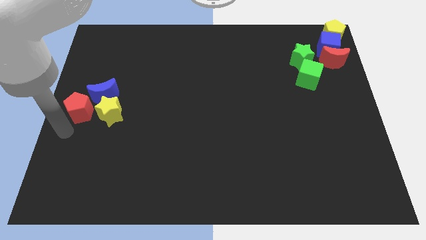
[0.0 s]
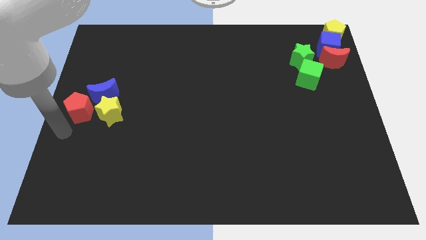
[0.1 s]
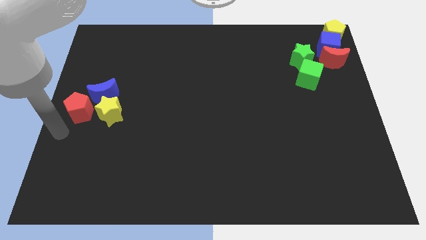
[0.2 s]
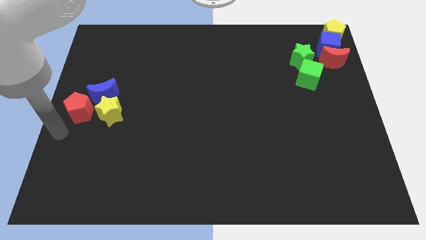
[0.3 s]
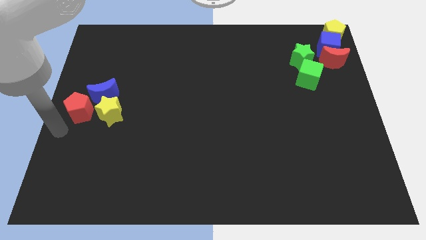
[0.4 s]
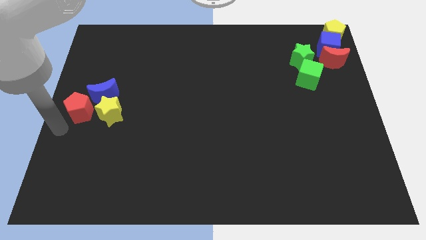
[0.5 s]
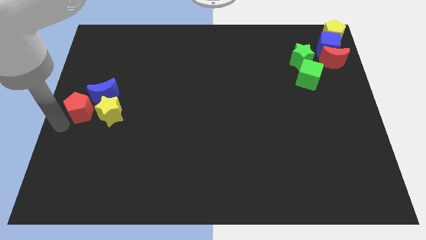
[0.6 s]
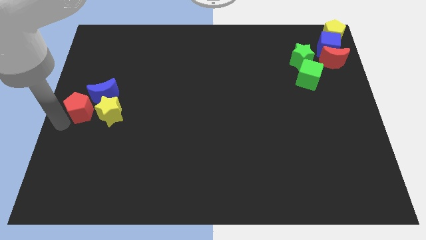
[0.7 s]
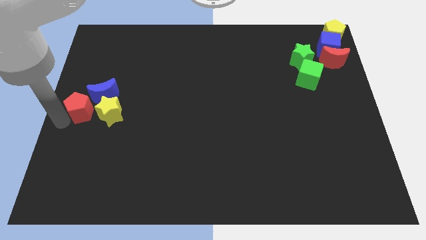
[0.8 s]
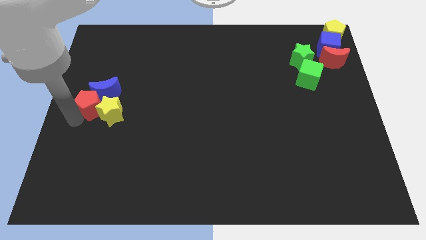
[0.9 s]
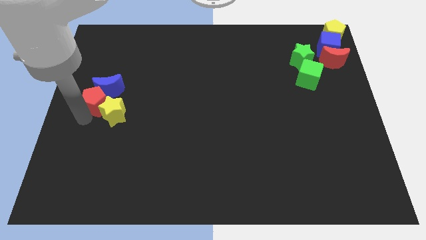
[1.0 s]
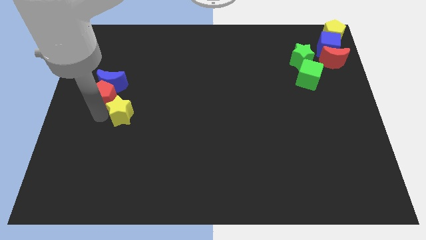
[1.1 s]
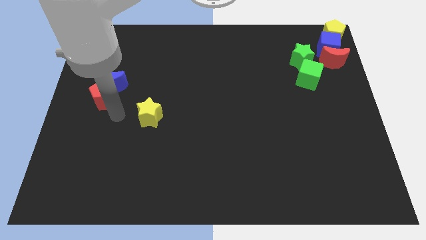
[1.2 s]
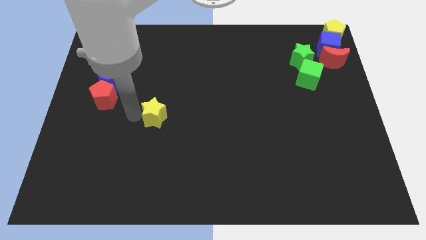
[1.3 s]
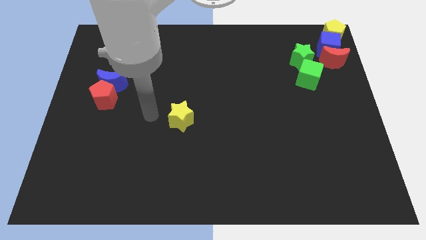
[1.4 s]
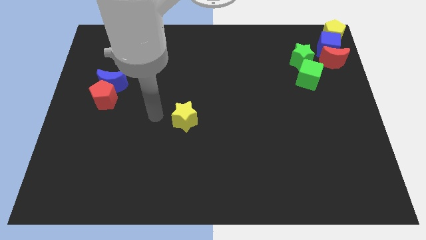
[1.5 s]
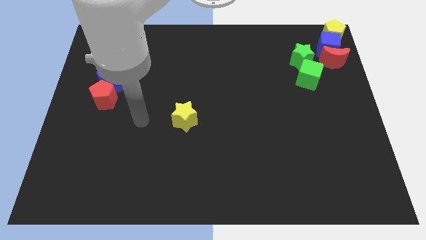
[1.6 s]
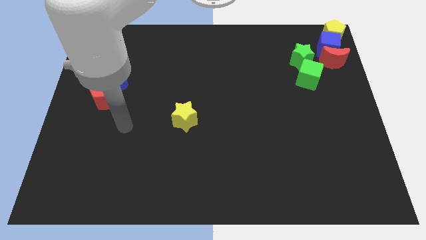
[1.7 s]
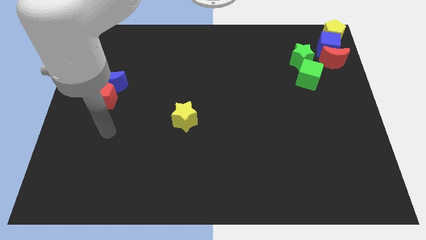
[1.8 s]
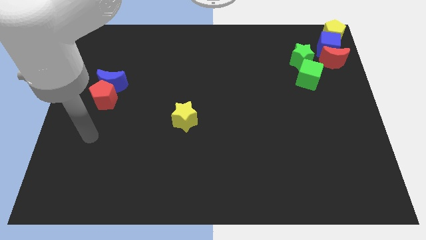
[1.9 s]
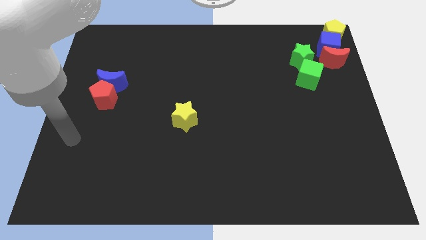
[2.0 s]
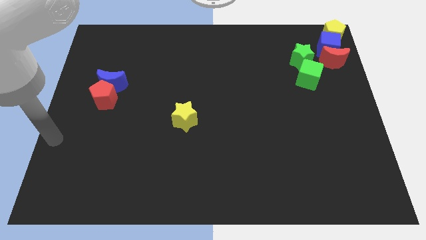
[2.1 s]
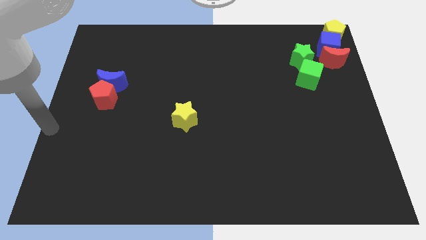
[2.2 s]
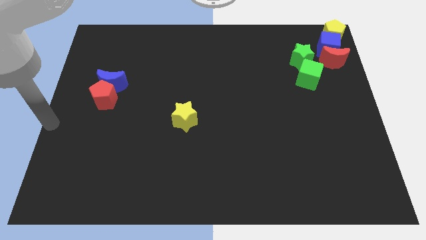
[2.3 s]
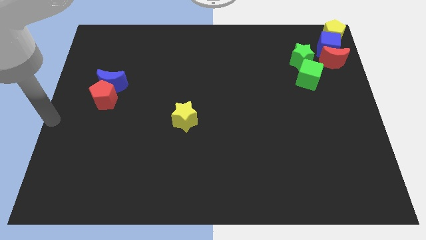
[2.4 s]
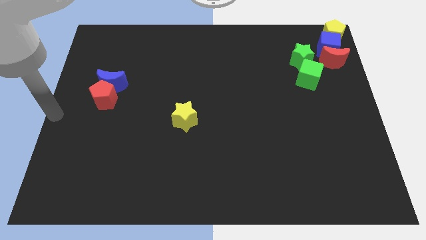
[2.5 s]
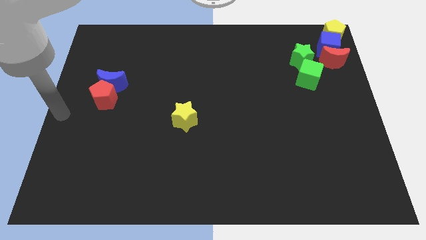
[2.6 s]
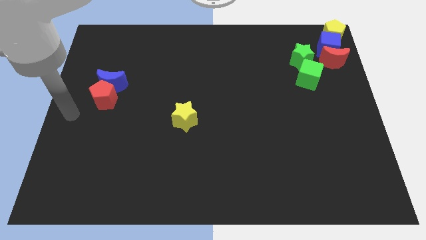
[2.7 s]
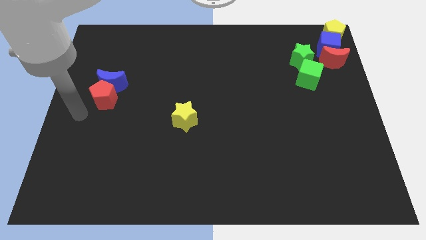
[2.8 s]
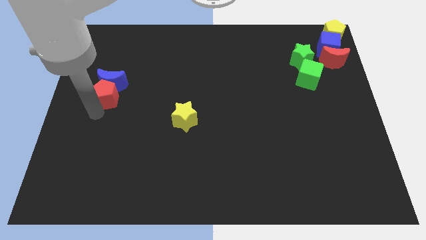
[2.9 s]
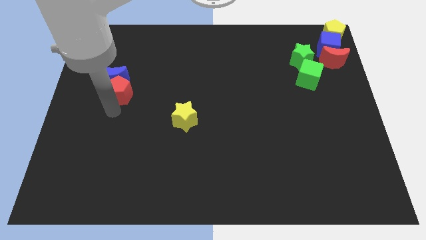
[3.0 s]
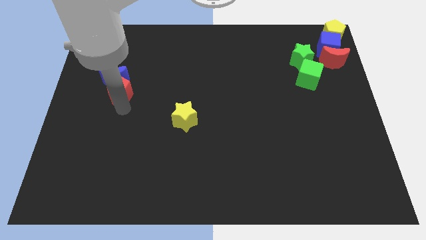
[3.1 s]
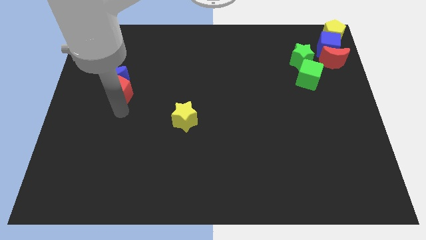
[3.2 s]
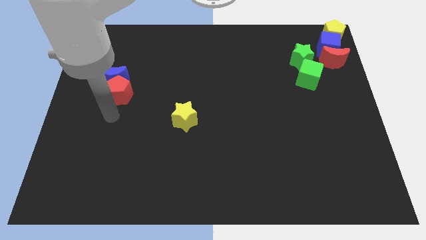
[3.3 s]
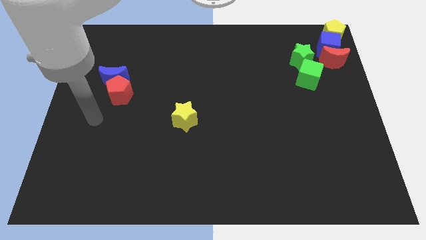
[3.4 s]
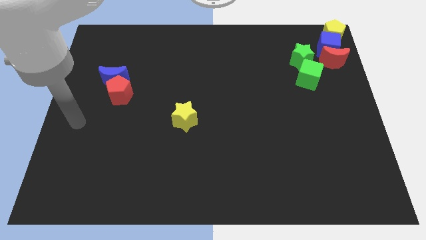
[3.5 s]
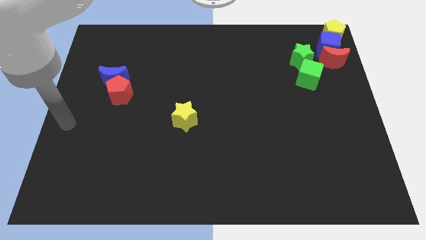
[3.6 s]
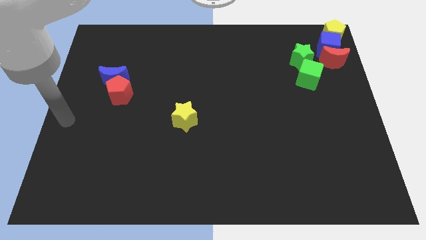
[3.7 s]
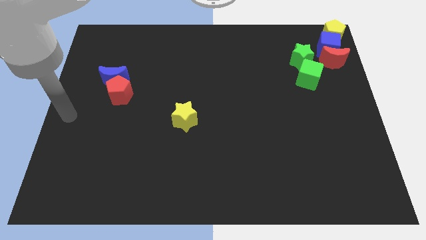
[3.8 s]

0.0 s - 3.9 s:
separate the yellow star from the red pentagon and the blue crescent

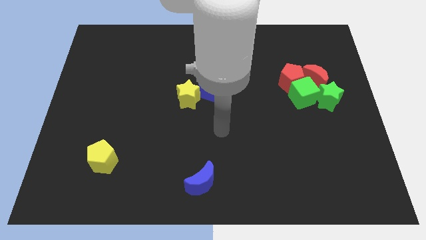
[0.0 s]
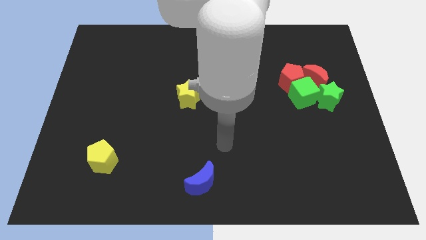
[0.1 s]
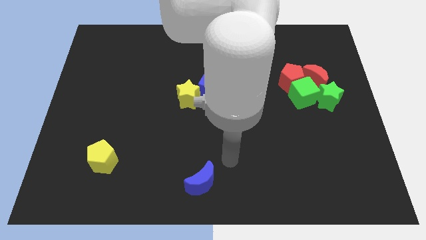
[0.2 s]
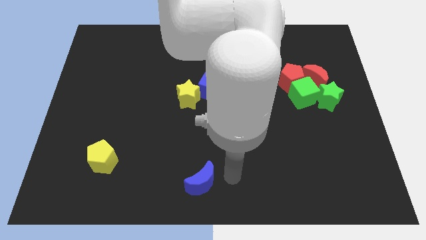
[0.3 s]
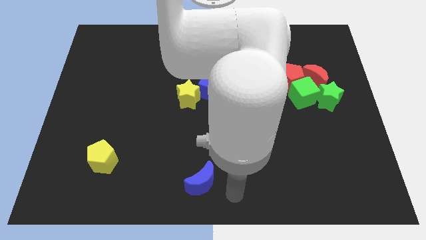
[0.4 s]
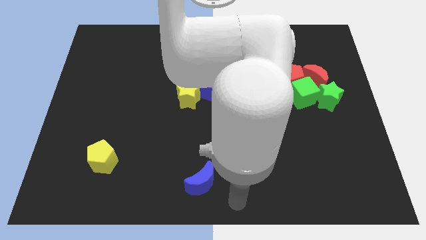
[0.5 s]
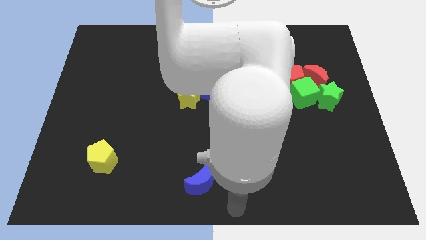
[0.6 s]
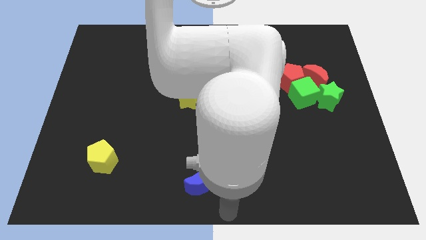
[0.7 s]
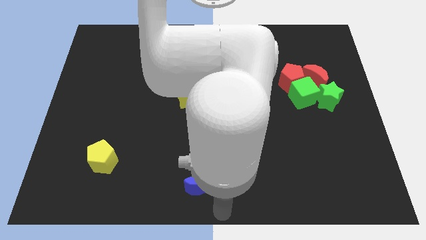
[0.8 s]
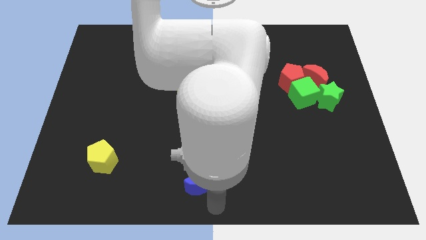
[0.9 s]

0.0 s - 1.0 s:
put your arm at the bottom center of the board

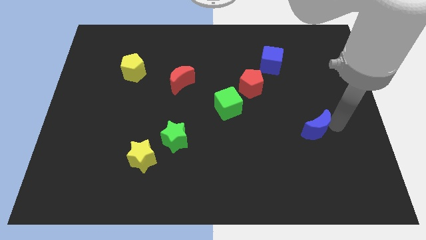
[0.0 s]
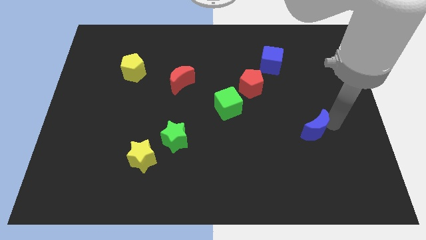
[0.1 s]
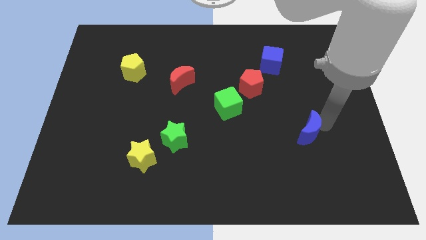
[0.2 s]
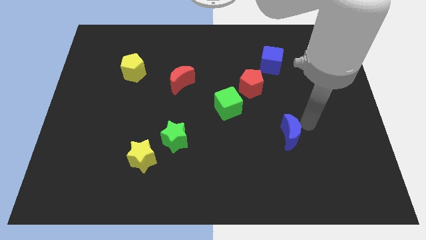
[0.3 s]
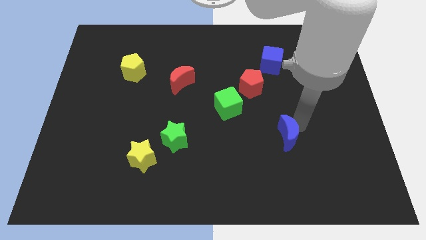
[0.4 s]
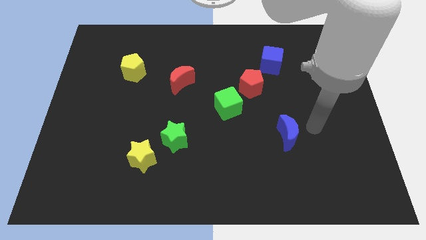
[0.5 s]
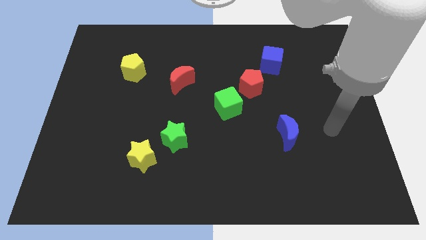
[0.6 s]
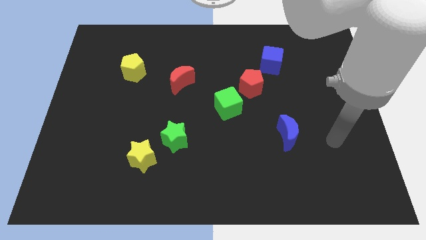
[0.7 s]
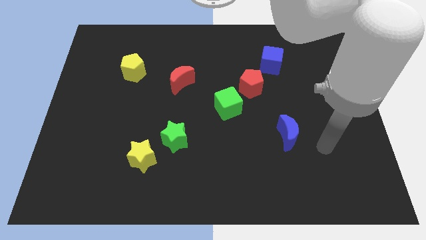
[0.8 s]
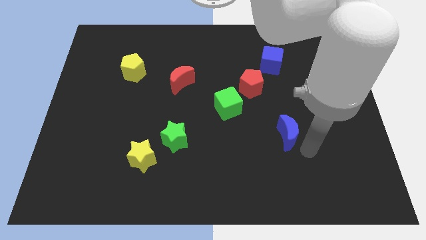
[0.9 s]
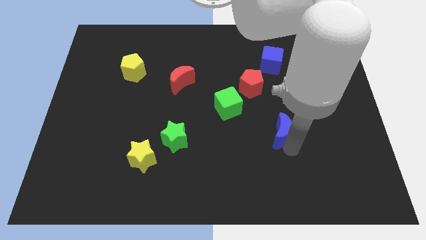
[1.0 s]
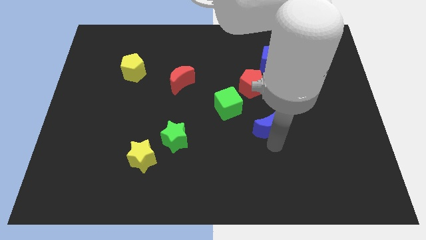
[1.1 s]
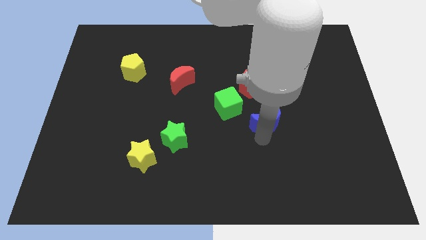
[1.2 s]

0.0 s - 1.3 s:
place the blue moon down to the red pentagon

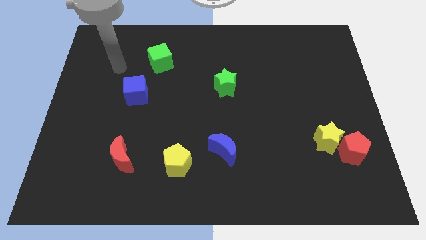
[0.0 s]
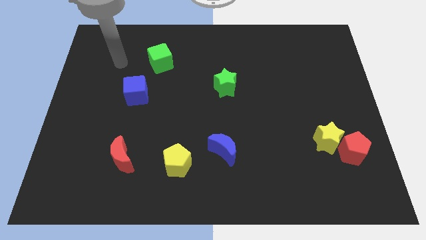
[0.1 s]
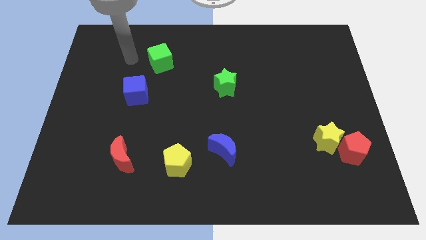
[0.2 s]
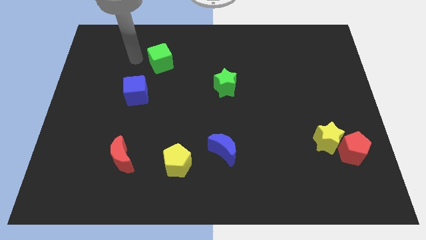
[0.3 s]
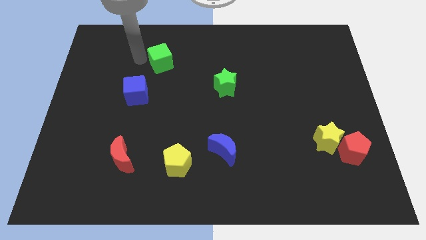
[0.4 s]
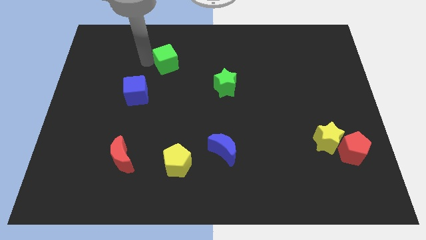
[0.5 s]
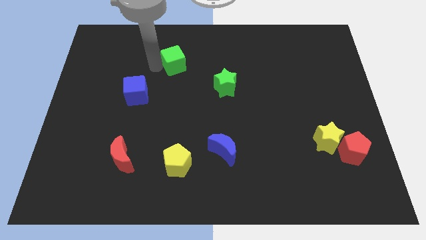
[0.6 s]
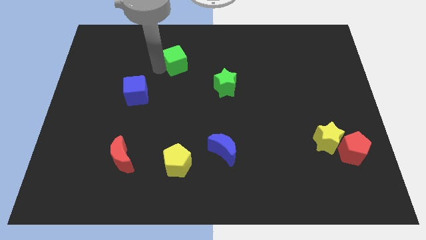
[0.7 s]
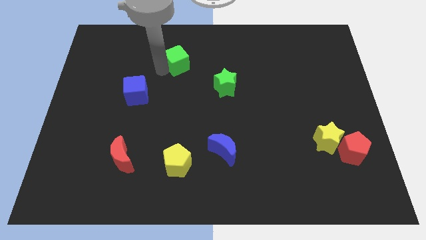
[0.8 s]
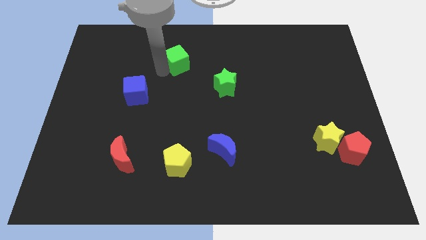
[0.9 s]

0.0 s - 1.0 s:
move the green cube slightly to the right side

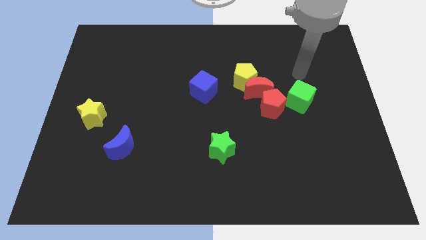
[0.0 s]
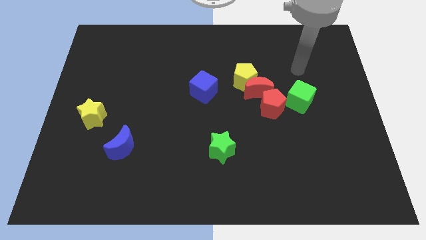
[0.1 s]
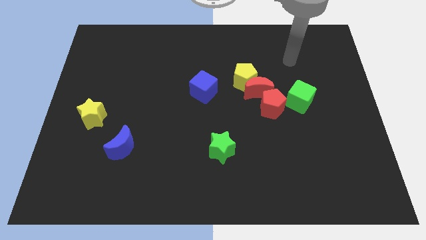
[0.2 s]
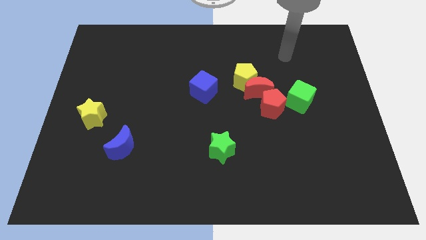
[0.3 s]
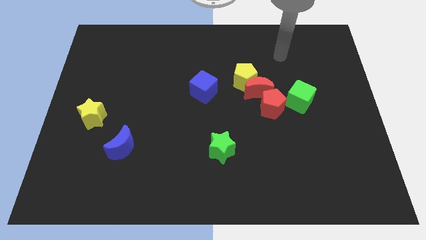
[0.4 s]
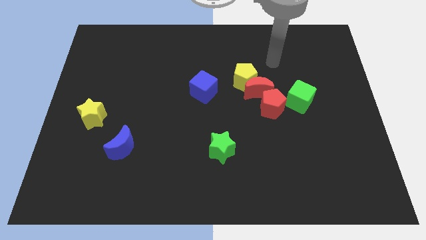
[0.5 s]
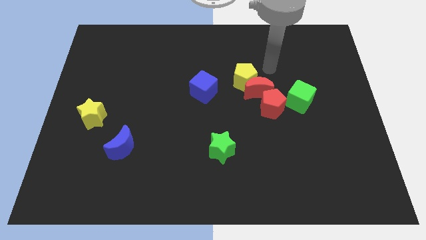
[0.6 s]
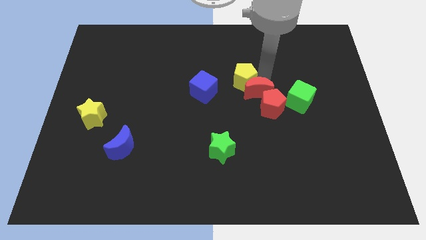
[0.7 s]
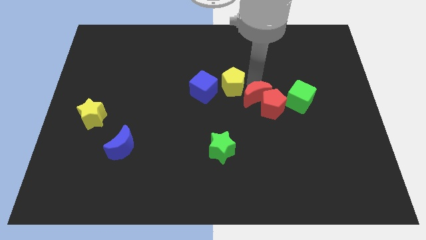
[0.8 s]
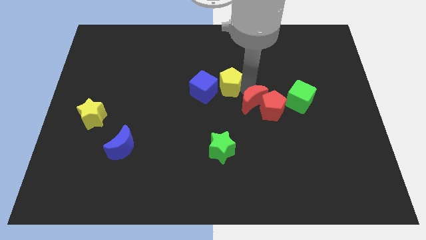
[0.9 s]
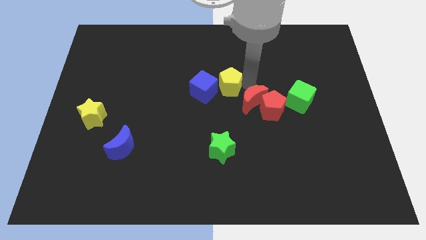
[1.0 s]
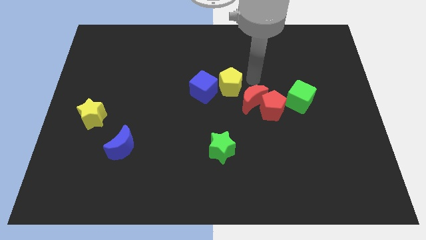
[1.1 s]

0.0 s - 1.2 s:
point your arm between red moon and yellow pentagon

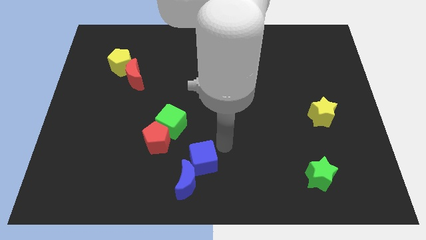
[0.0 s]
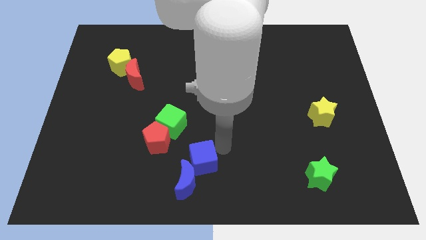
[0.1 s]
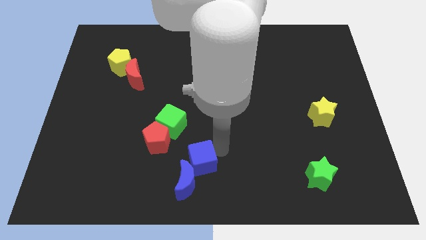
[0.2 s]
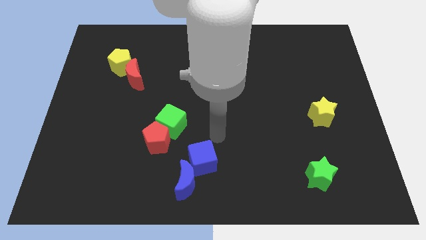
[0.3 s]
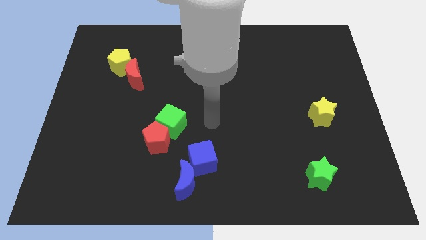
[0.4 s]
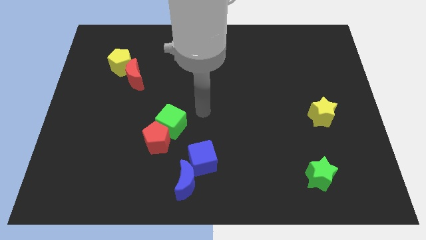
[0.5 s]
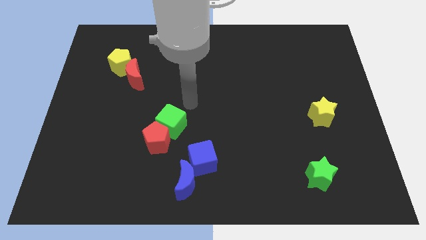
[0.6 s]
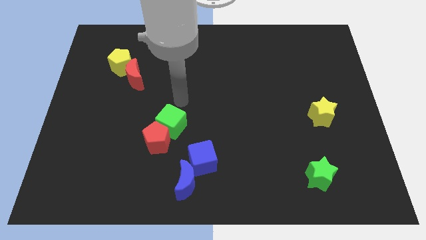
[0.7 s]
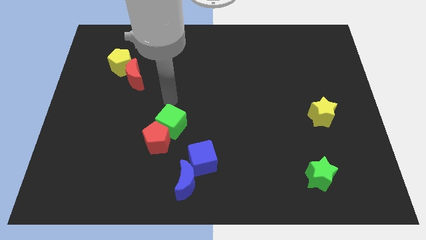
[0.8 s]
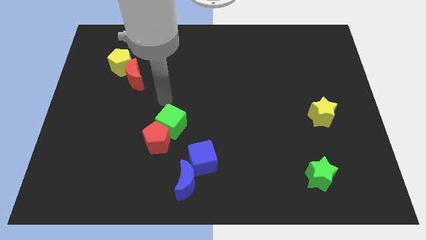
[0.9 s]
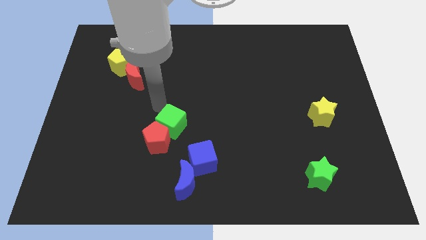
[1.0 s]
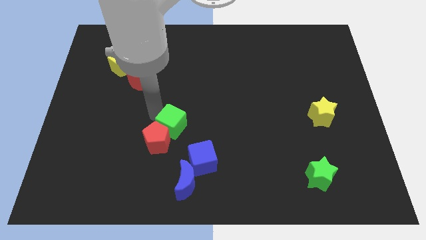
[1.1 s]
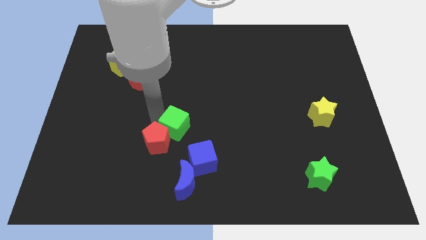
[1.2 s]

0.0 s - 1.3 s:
move your arm away from blue cube
